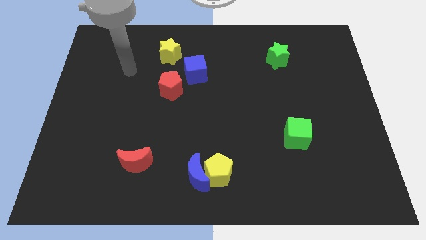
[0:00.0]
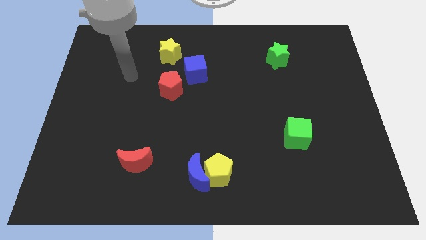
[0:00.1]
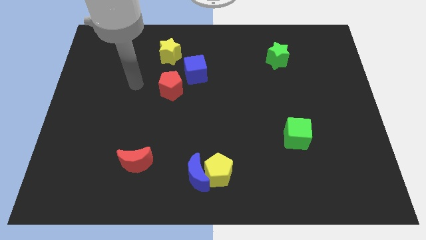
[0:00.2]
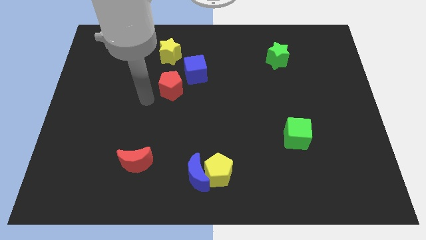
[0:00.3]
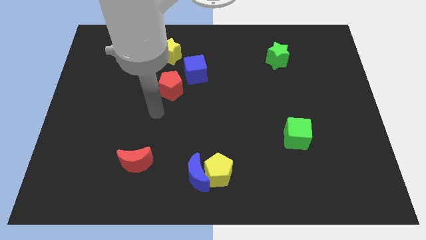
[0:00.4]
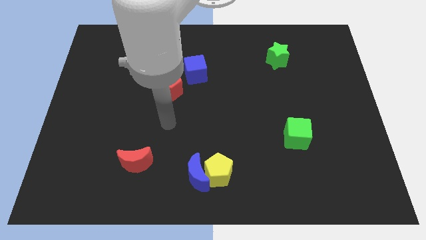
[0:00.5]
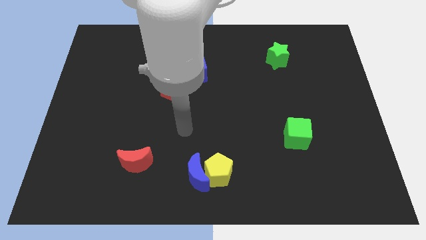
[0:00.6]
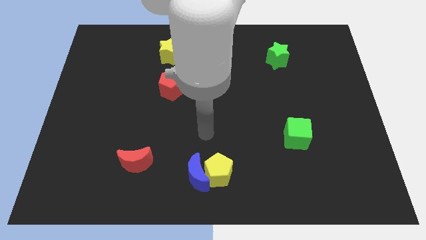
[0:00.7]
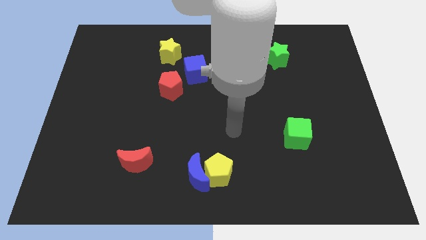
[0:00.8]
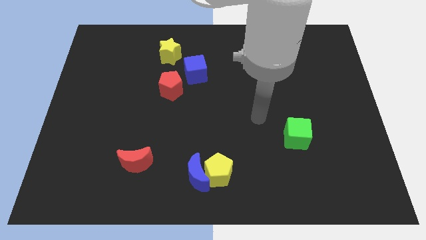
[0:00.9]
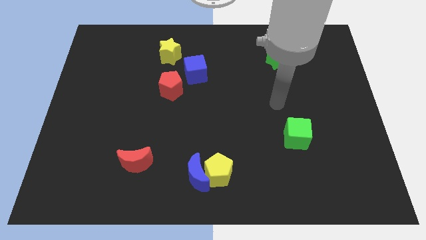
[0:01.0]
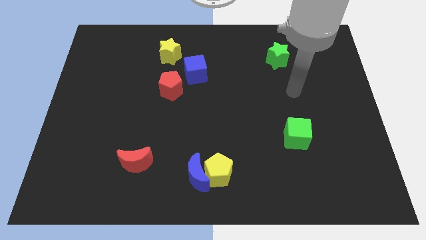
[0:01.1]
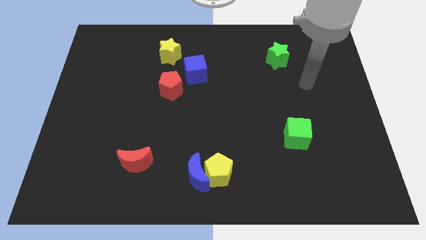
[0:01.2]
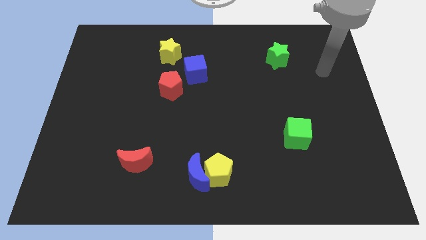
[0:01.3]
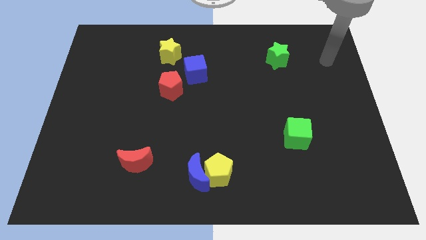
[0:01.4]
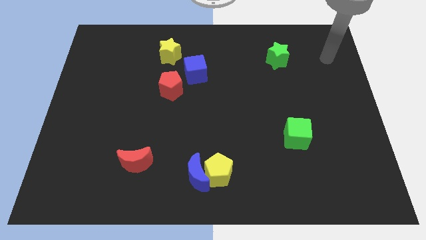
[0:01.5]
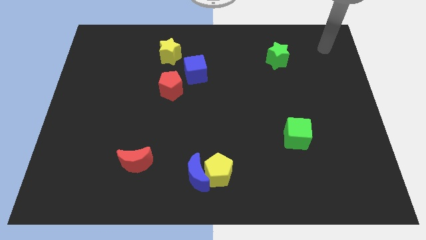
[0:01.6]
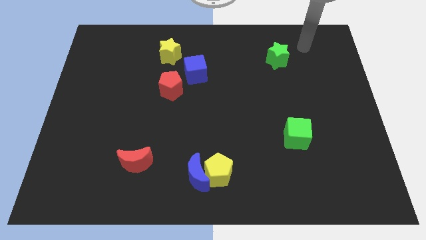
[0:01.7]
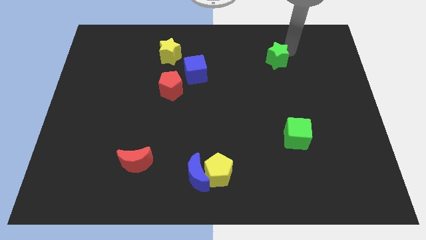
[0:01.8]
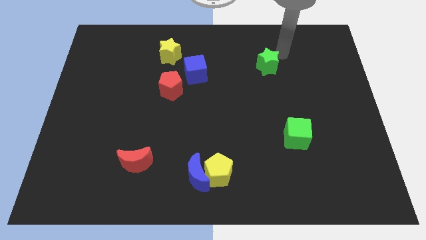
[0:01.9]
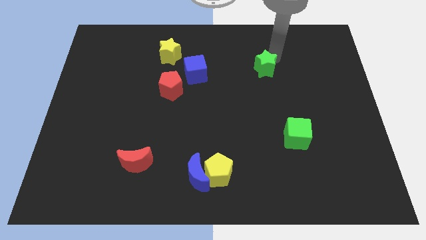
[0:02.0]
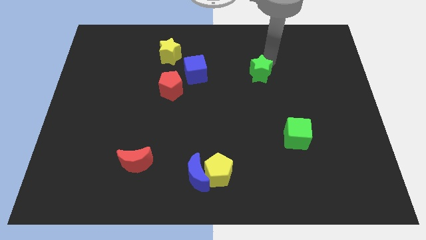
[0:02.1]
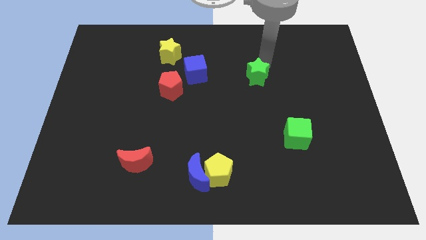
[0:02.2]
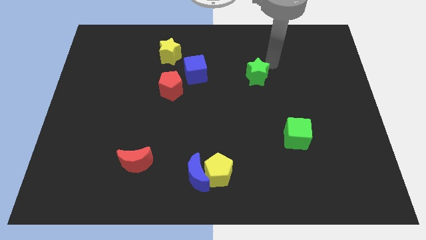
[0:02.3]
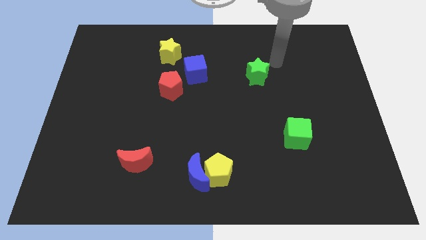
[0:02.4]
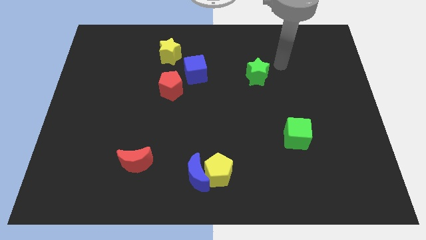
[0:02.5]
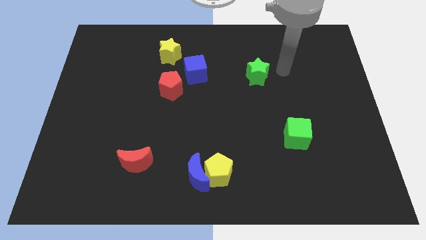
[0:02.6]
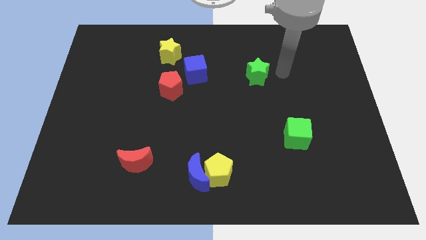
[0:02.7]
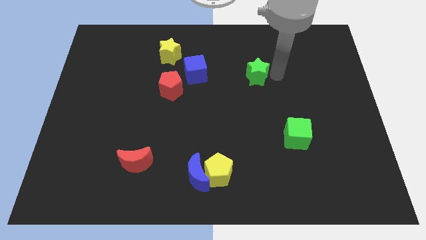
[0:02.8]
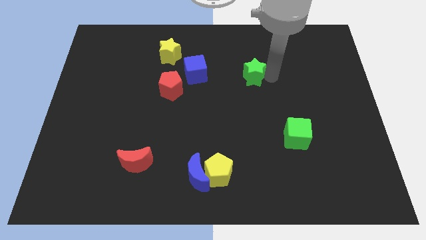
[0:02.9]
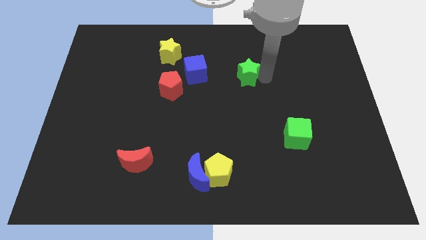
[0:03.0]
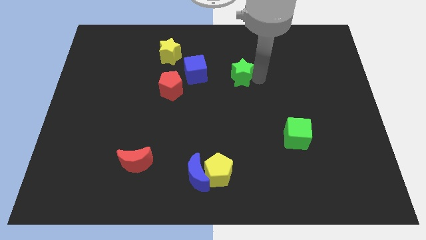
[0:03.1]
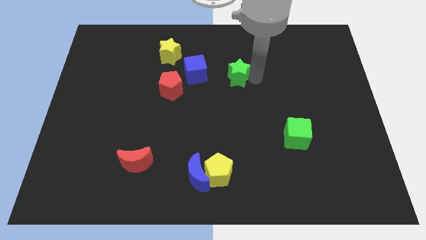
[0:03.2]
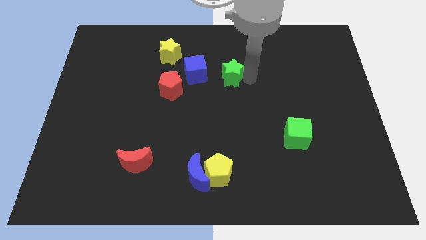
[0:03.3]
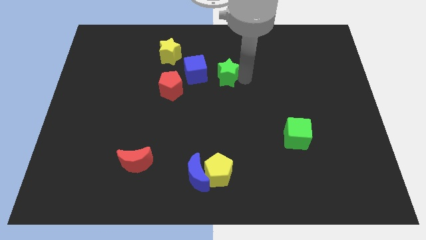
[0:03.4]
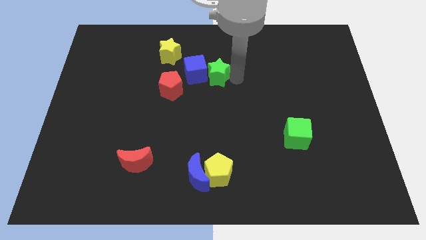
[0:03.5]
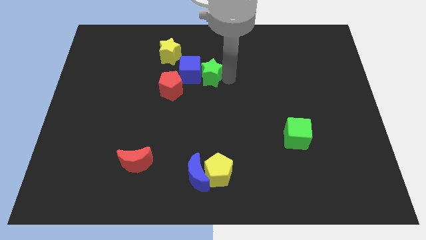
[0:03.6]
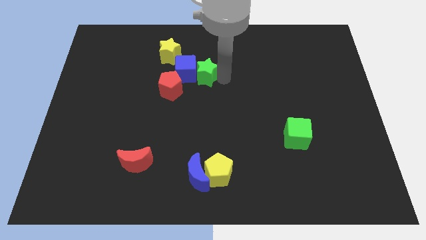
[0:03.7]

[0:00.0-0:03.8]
move the green star towards the blue cube

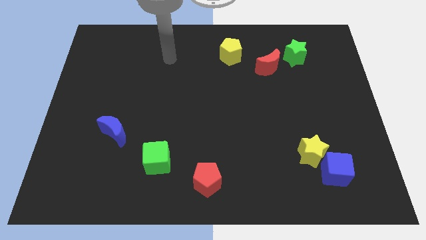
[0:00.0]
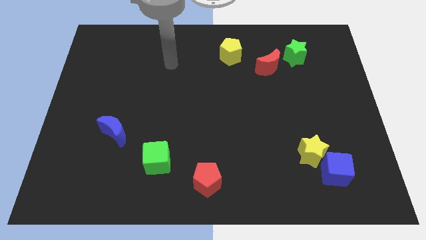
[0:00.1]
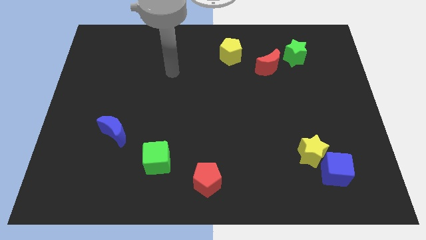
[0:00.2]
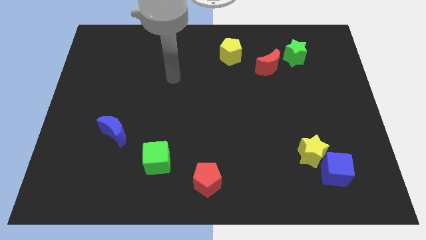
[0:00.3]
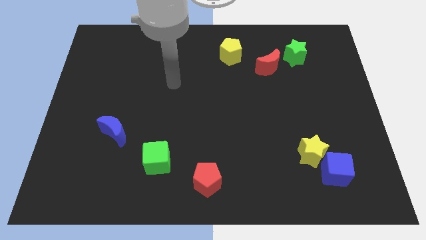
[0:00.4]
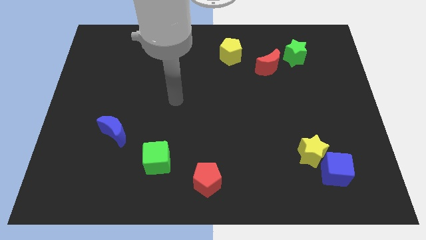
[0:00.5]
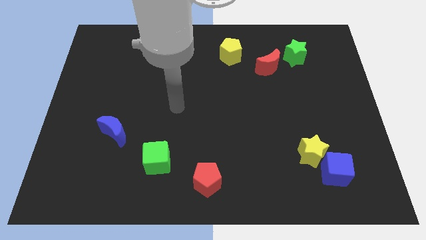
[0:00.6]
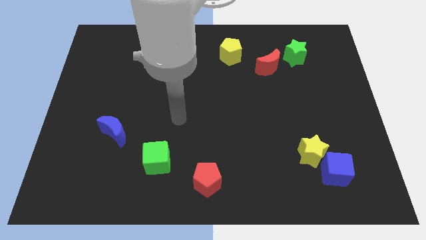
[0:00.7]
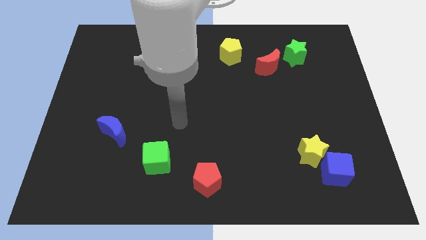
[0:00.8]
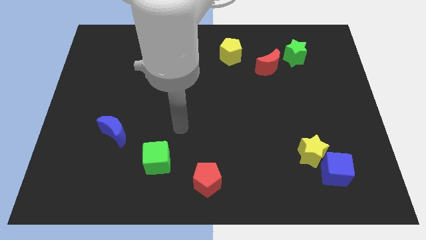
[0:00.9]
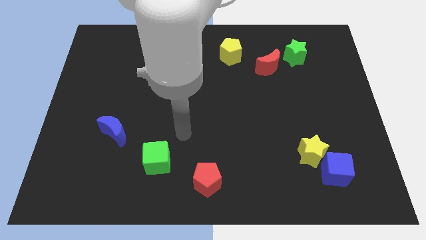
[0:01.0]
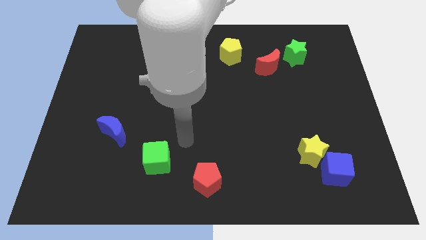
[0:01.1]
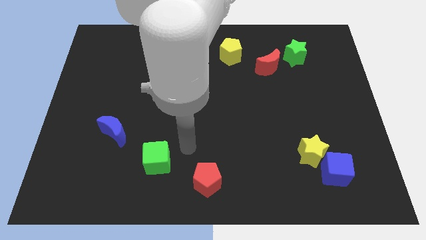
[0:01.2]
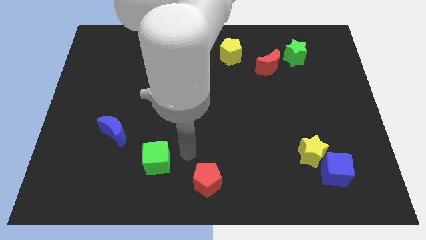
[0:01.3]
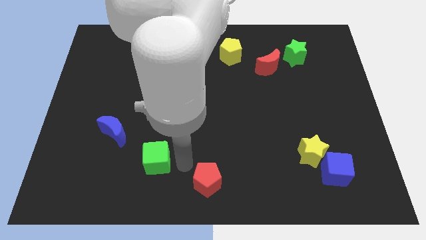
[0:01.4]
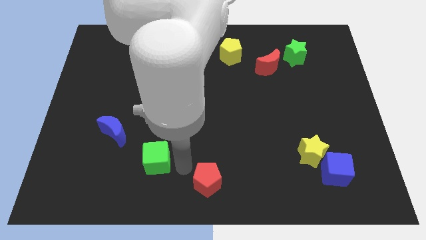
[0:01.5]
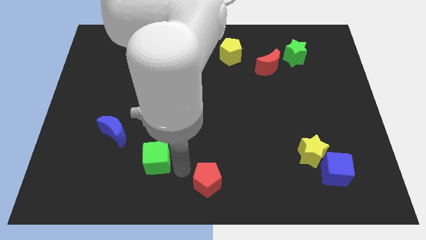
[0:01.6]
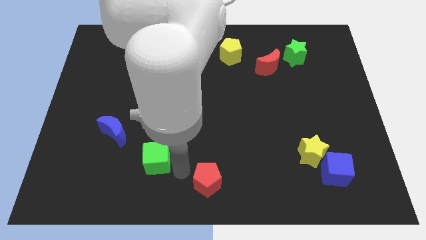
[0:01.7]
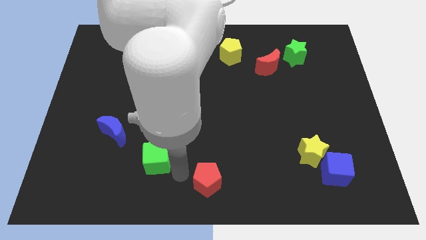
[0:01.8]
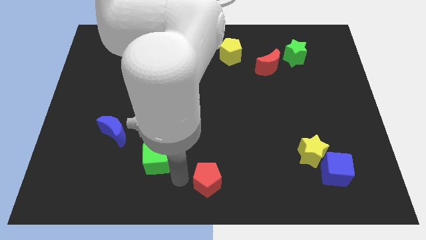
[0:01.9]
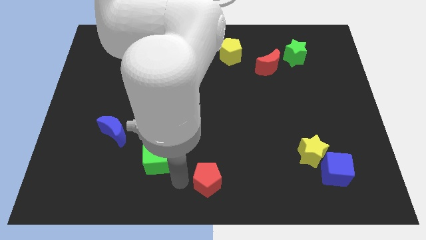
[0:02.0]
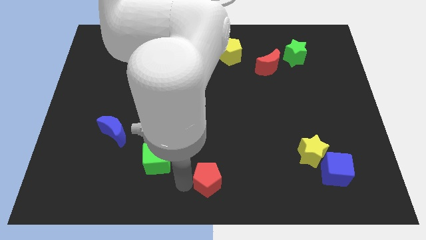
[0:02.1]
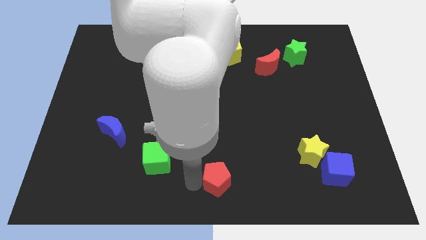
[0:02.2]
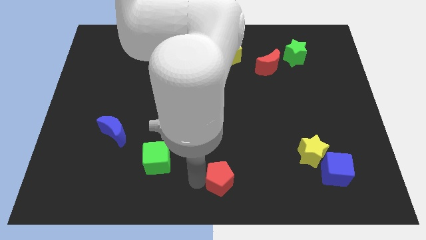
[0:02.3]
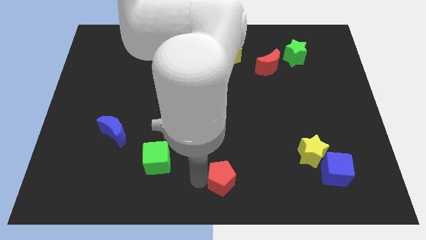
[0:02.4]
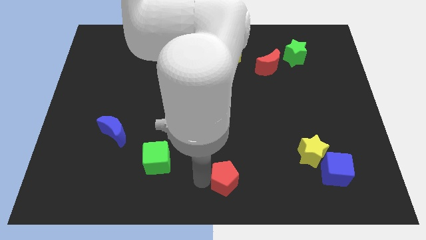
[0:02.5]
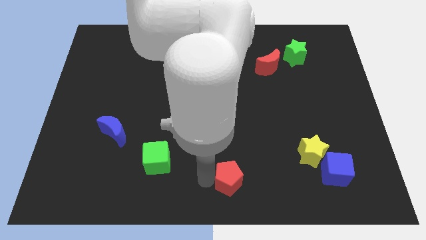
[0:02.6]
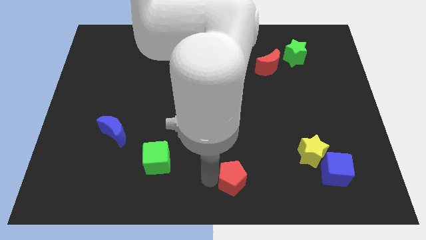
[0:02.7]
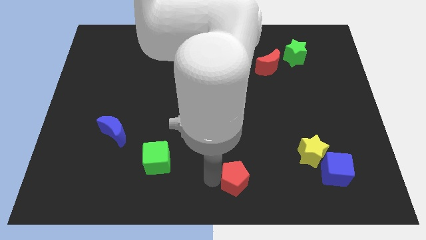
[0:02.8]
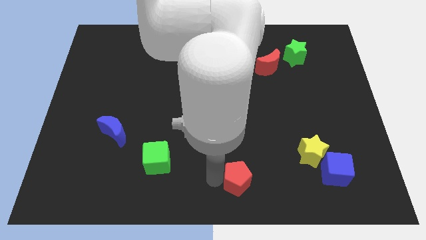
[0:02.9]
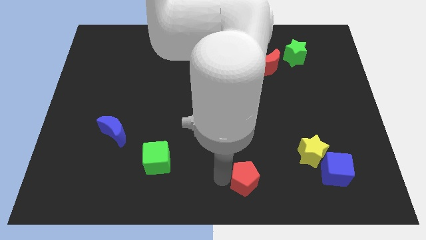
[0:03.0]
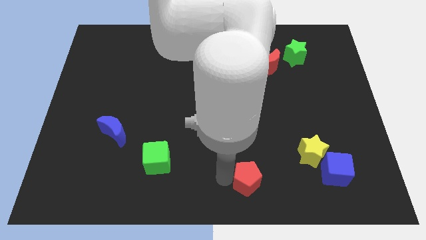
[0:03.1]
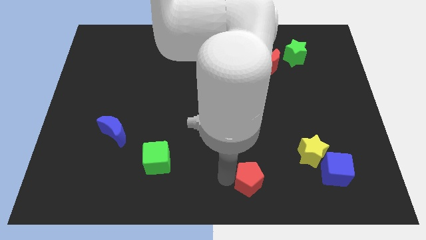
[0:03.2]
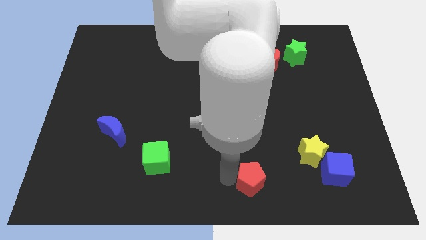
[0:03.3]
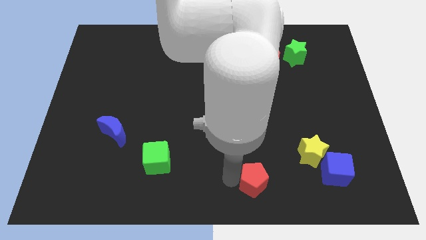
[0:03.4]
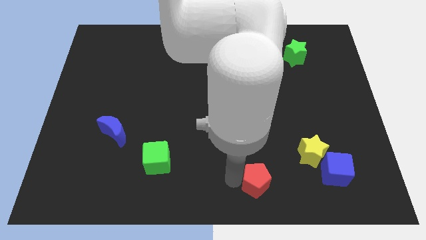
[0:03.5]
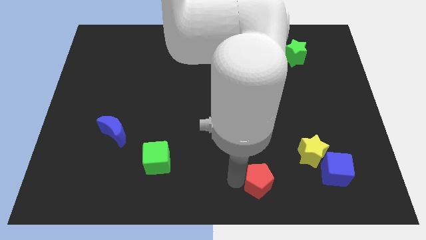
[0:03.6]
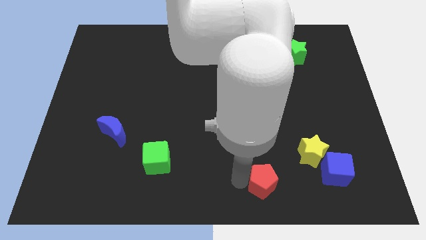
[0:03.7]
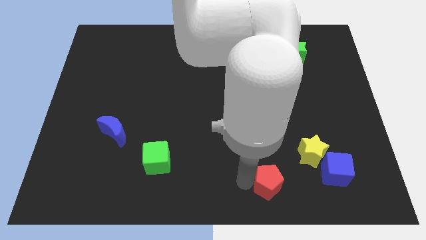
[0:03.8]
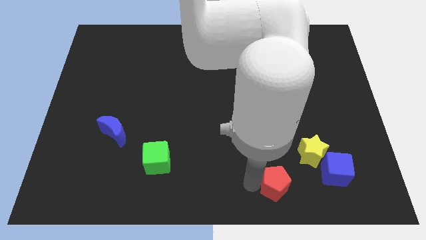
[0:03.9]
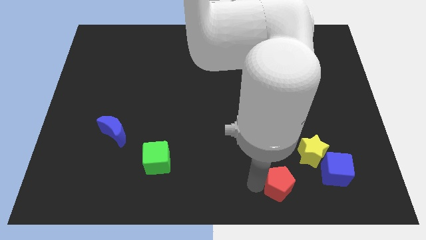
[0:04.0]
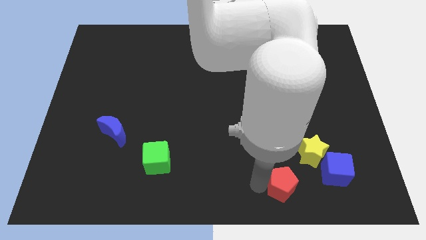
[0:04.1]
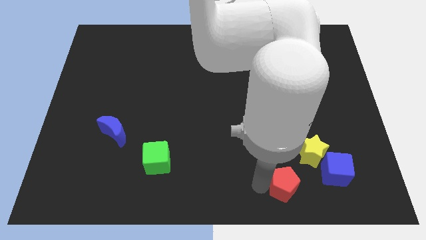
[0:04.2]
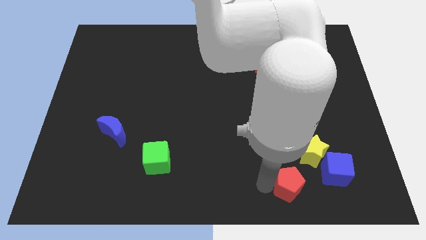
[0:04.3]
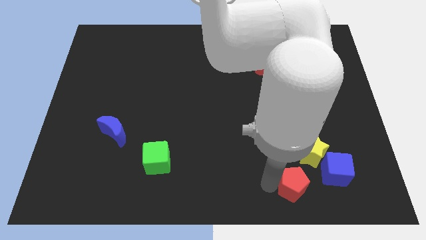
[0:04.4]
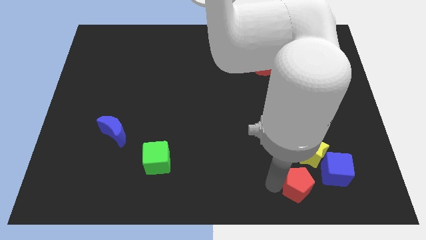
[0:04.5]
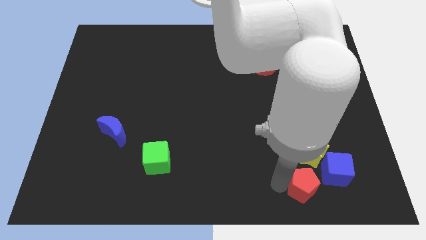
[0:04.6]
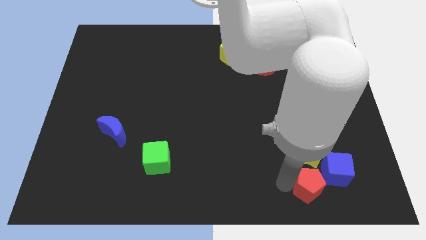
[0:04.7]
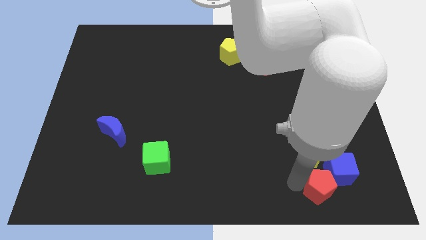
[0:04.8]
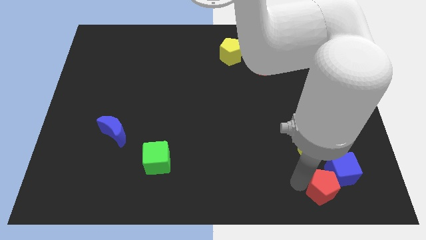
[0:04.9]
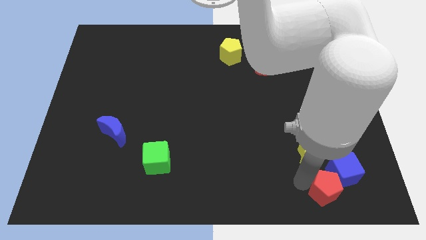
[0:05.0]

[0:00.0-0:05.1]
put the red pentagon close to the blue cube
